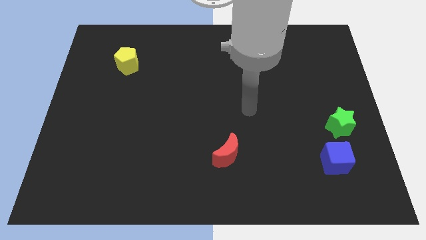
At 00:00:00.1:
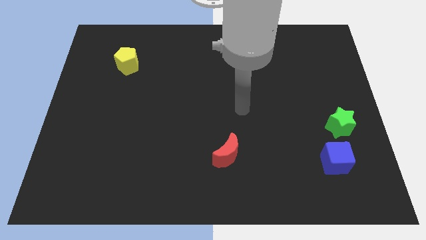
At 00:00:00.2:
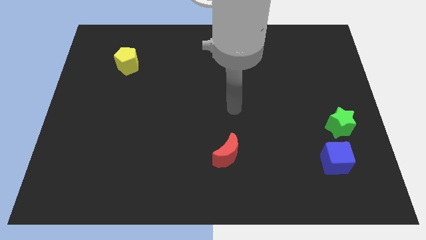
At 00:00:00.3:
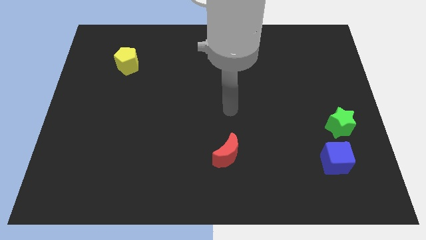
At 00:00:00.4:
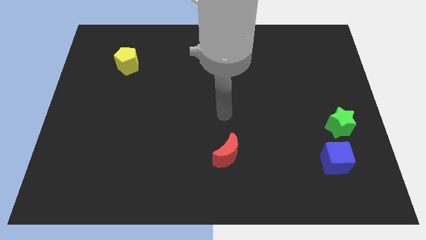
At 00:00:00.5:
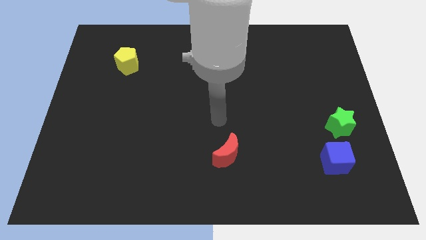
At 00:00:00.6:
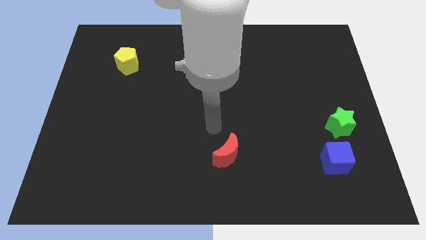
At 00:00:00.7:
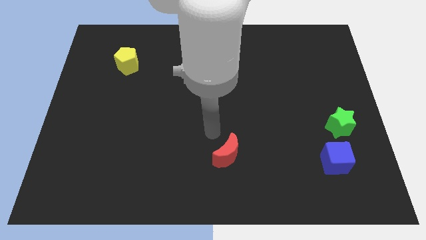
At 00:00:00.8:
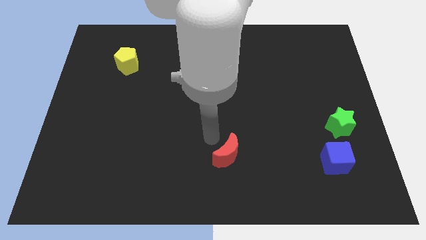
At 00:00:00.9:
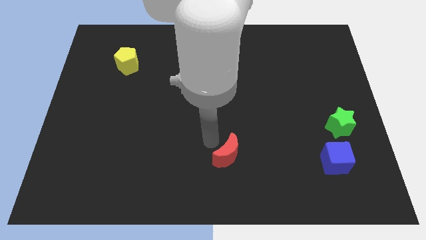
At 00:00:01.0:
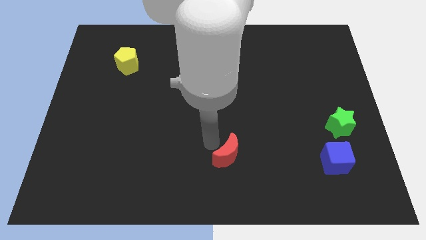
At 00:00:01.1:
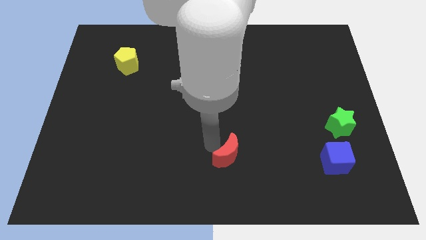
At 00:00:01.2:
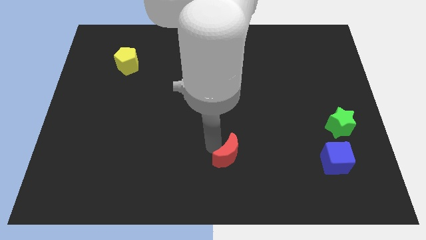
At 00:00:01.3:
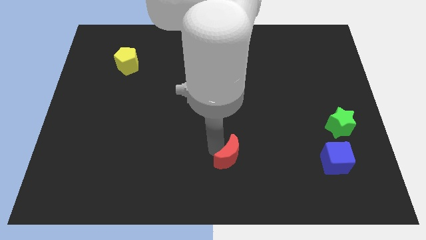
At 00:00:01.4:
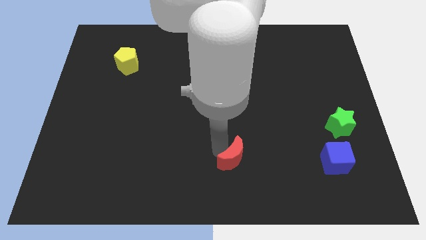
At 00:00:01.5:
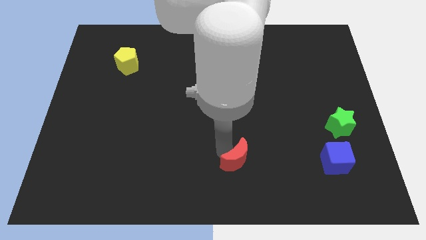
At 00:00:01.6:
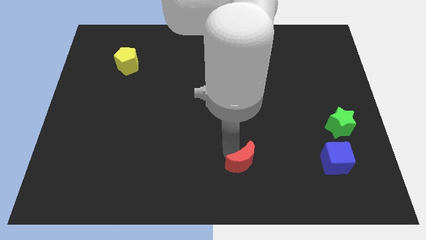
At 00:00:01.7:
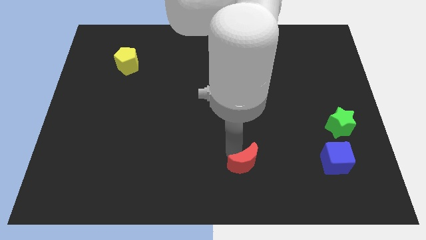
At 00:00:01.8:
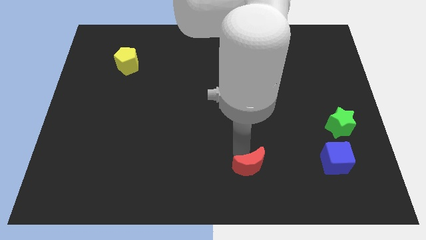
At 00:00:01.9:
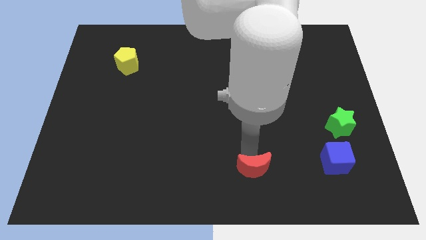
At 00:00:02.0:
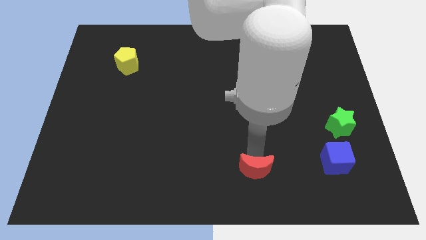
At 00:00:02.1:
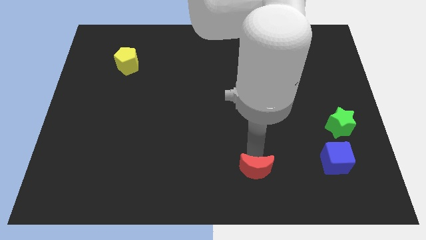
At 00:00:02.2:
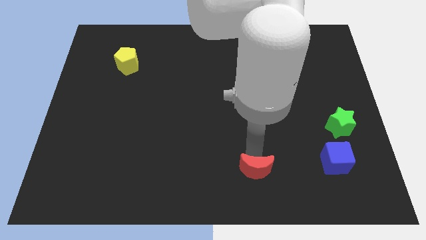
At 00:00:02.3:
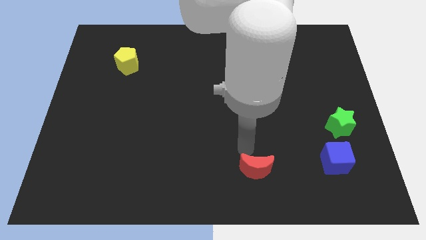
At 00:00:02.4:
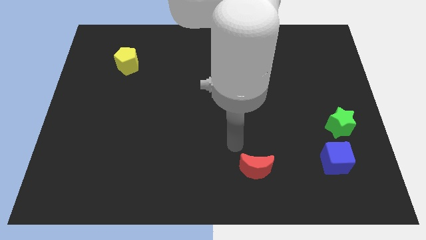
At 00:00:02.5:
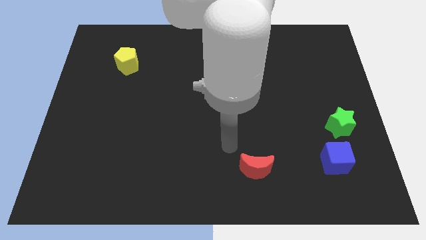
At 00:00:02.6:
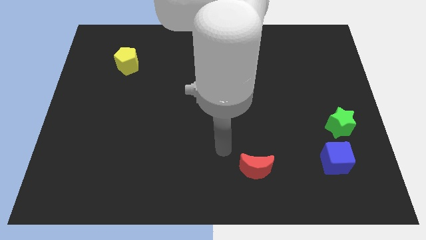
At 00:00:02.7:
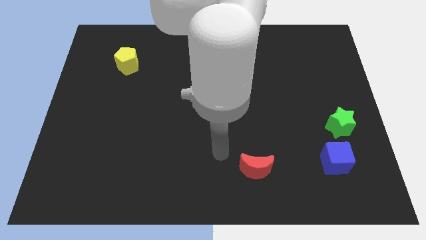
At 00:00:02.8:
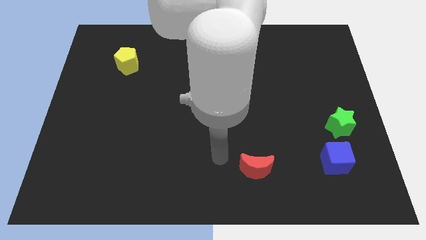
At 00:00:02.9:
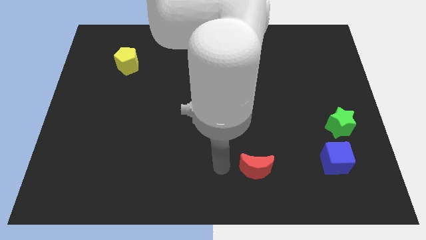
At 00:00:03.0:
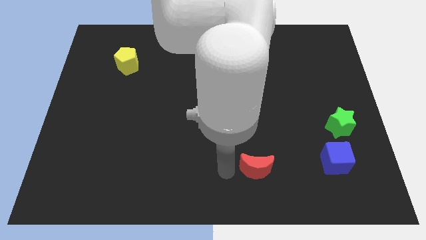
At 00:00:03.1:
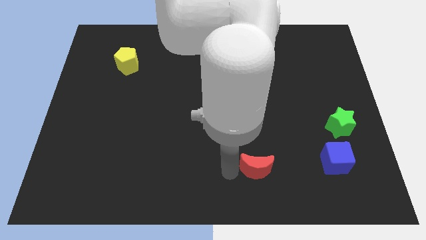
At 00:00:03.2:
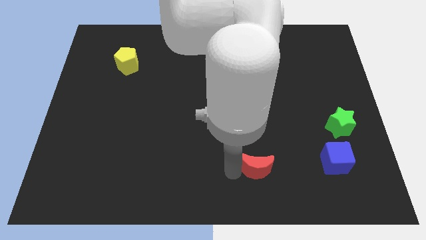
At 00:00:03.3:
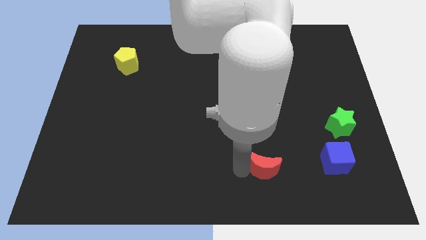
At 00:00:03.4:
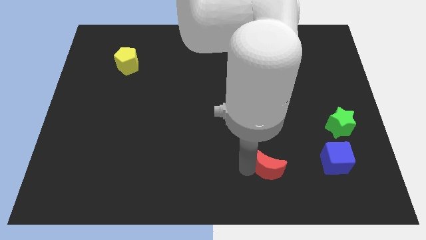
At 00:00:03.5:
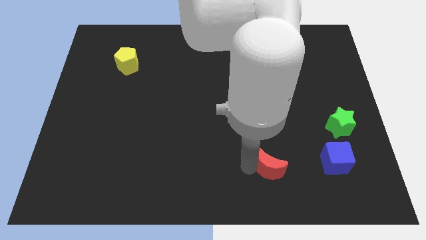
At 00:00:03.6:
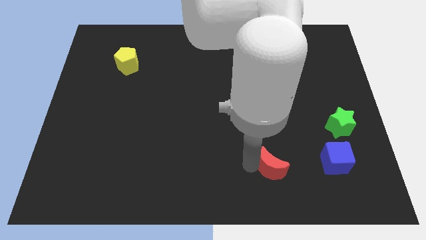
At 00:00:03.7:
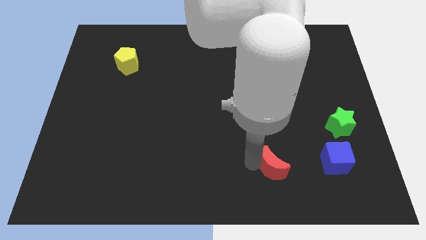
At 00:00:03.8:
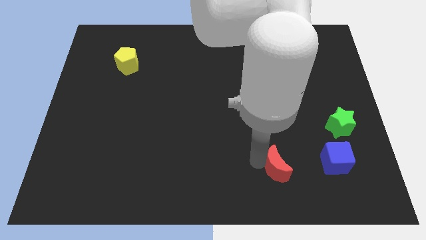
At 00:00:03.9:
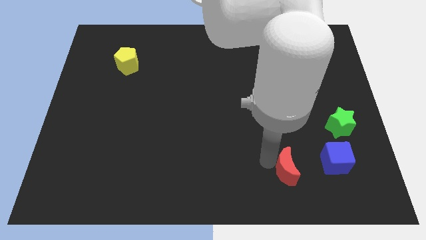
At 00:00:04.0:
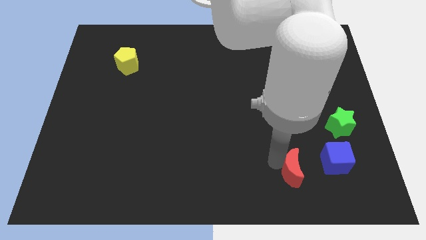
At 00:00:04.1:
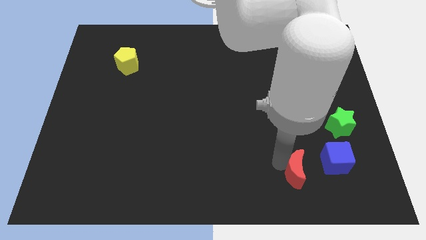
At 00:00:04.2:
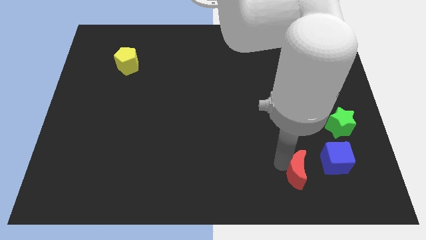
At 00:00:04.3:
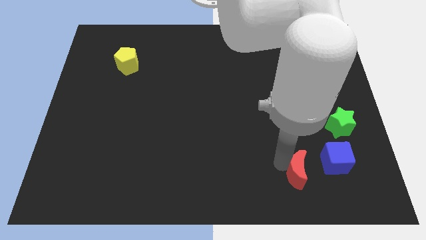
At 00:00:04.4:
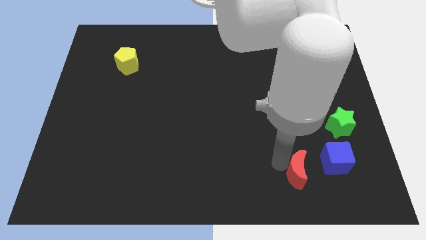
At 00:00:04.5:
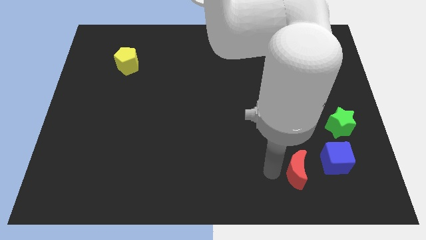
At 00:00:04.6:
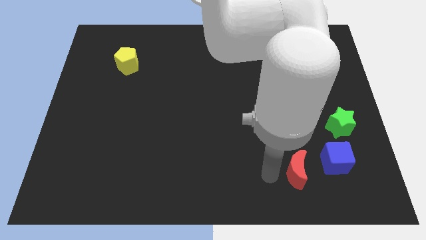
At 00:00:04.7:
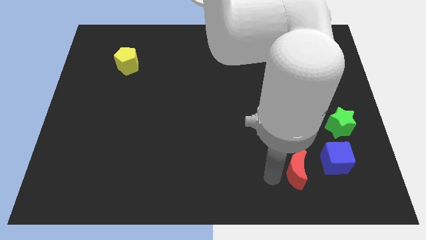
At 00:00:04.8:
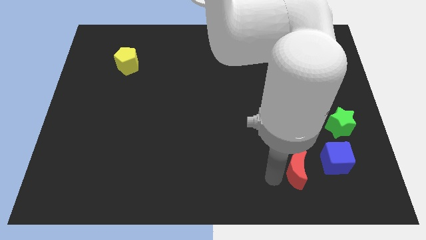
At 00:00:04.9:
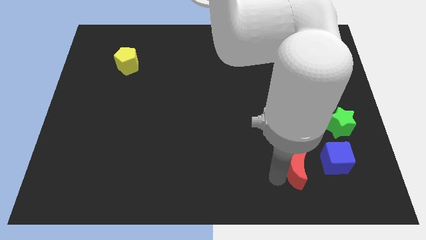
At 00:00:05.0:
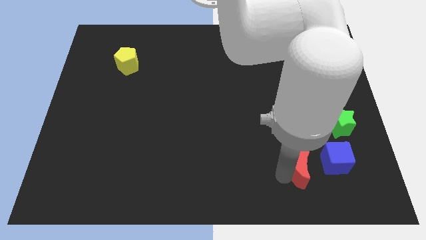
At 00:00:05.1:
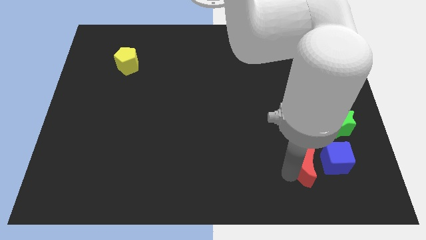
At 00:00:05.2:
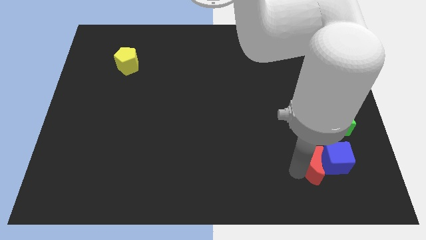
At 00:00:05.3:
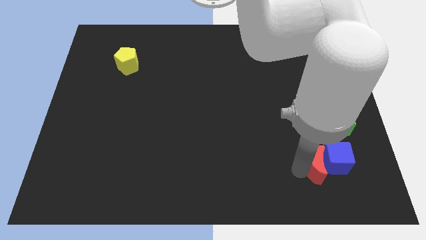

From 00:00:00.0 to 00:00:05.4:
move the red block towards the blue cube

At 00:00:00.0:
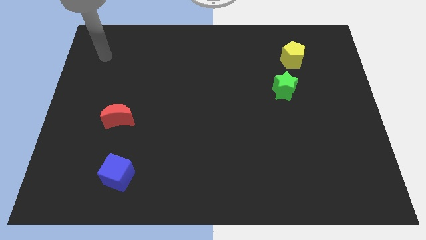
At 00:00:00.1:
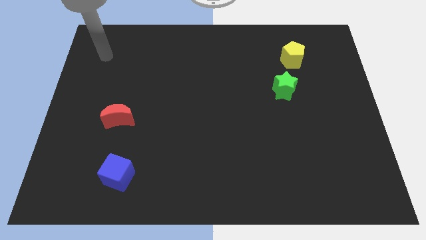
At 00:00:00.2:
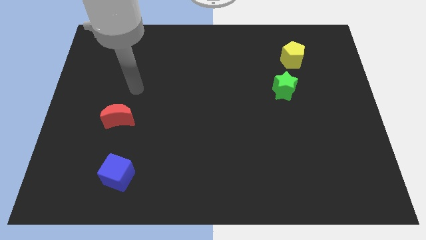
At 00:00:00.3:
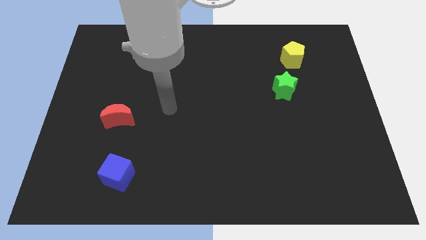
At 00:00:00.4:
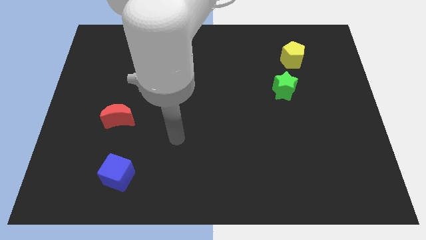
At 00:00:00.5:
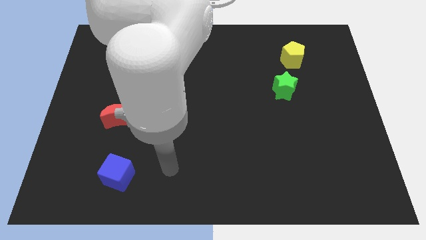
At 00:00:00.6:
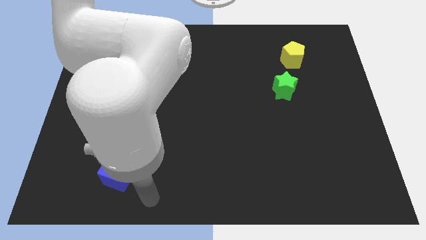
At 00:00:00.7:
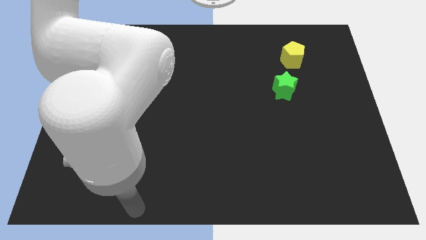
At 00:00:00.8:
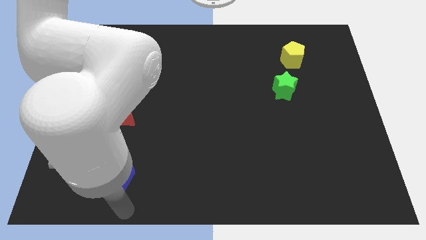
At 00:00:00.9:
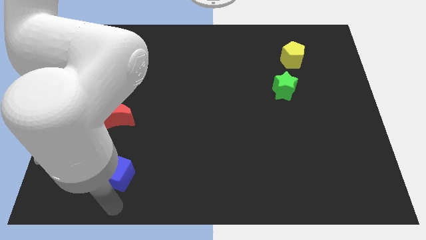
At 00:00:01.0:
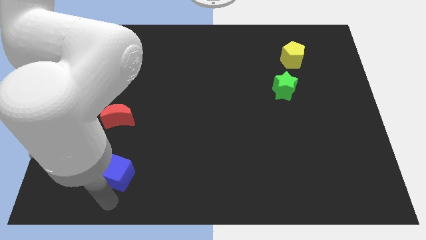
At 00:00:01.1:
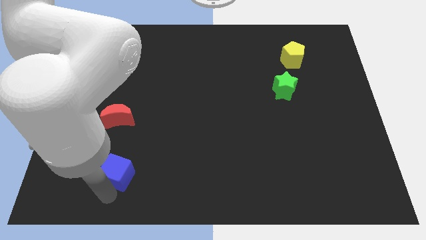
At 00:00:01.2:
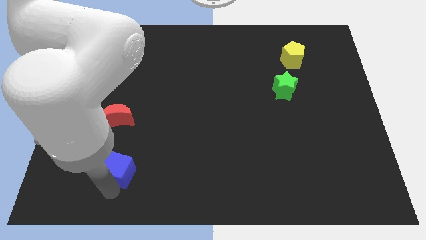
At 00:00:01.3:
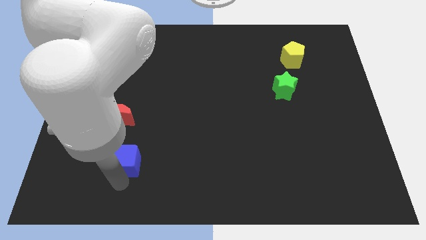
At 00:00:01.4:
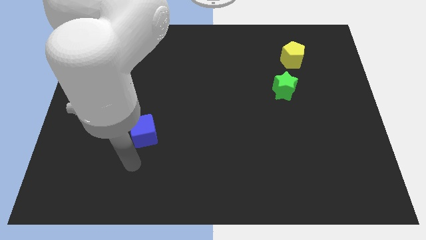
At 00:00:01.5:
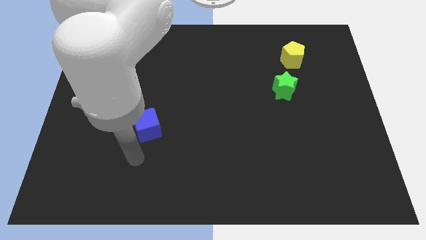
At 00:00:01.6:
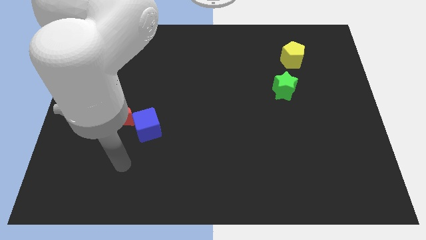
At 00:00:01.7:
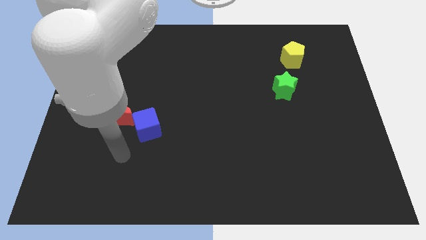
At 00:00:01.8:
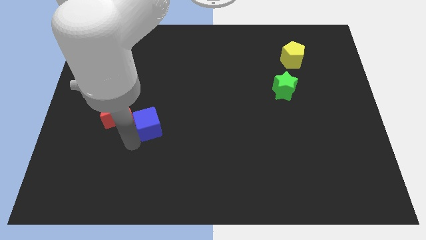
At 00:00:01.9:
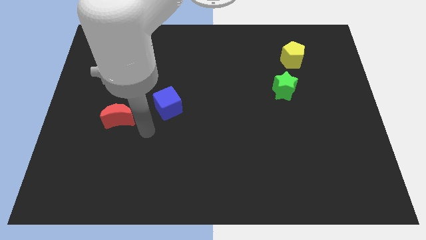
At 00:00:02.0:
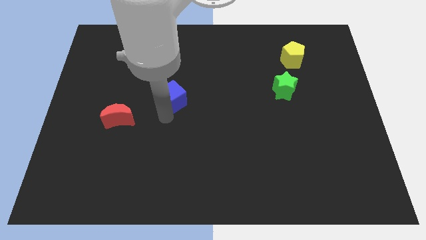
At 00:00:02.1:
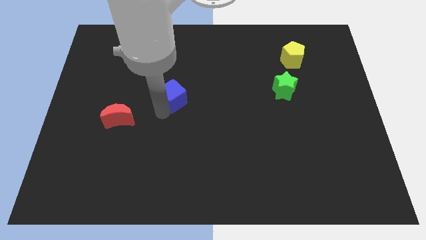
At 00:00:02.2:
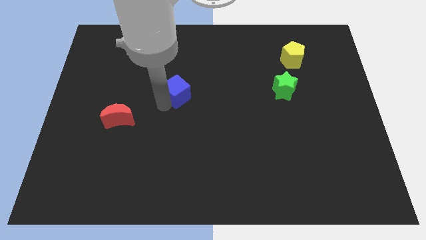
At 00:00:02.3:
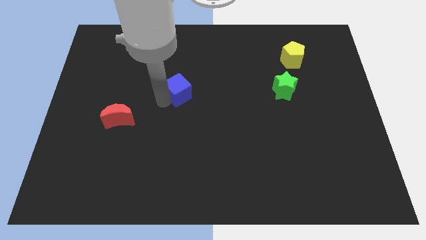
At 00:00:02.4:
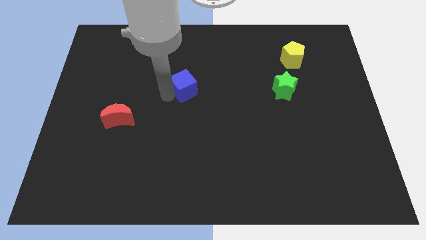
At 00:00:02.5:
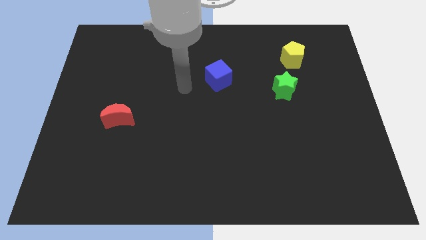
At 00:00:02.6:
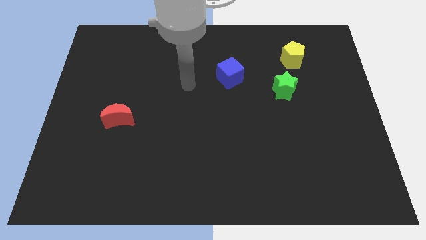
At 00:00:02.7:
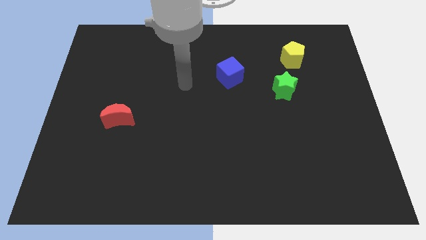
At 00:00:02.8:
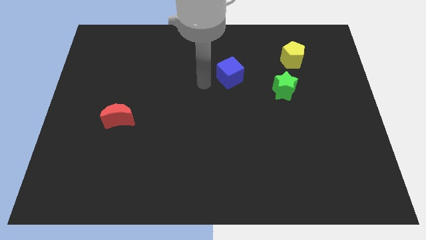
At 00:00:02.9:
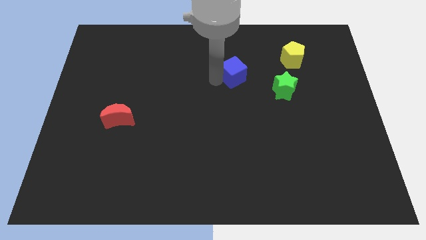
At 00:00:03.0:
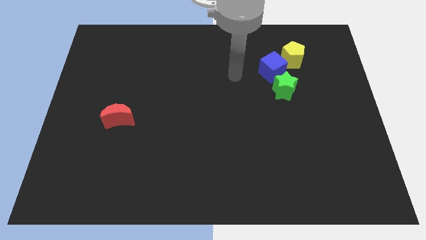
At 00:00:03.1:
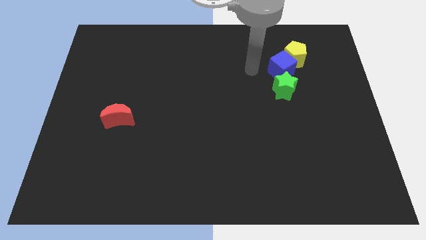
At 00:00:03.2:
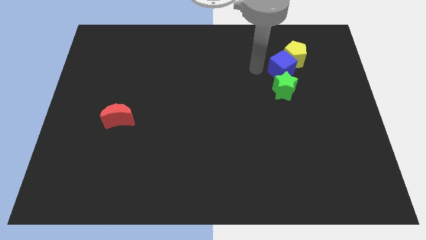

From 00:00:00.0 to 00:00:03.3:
move the cube next to the yellow pentagon
